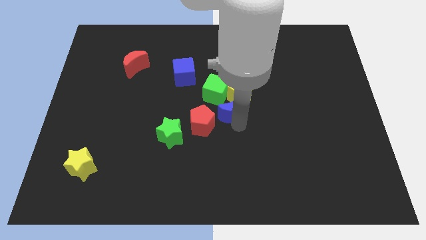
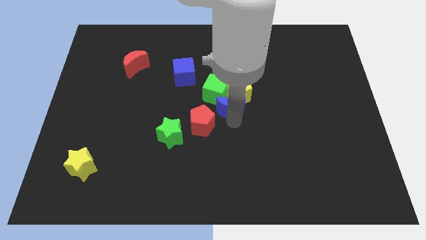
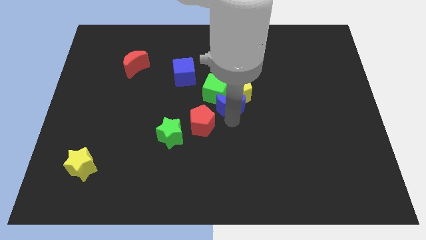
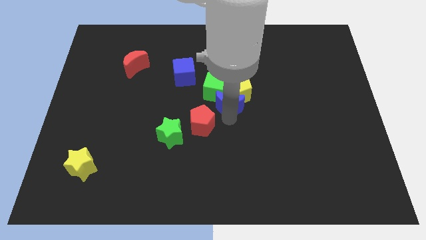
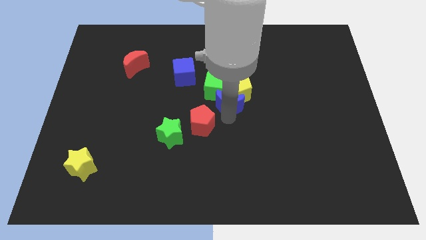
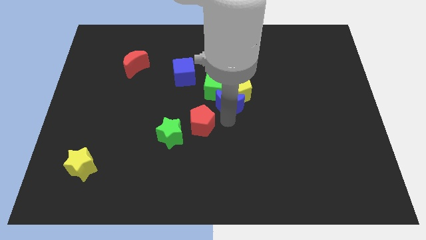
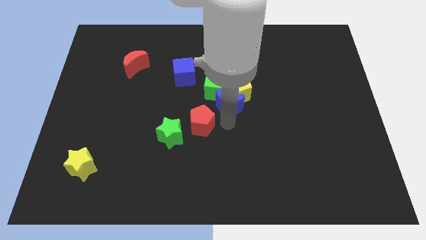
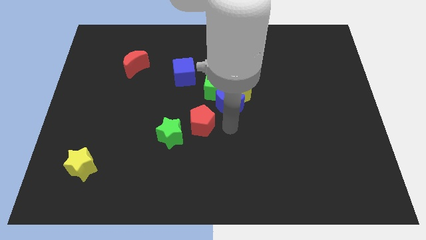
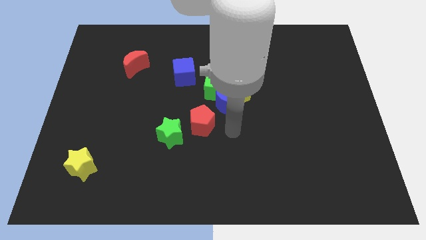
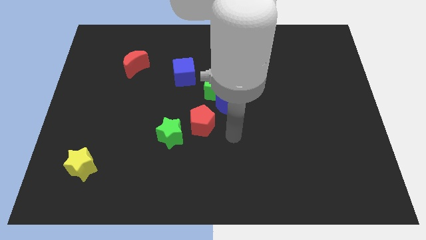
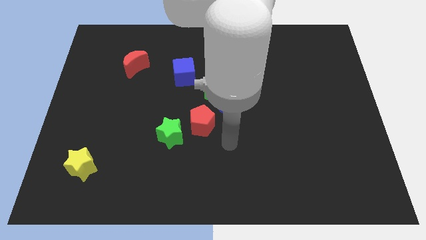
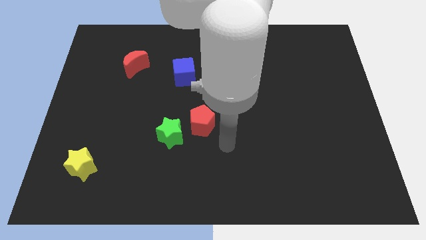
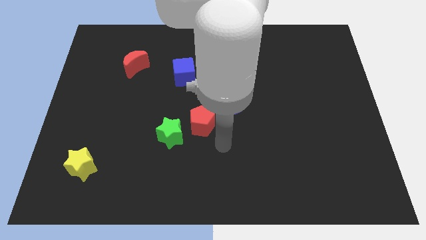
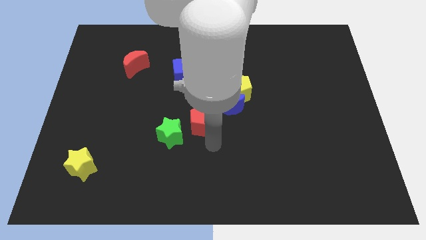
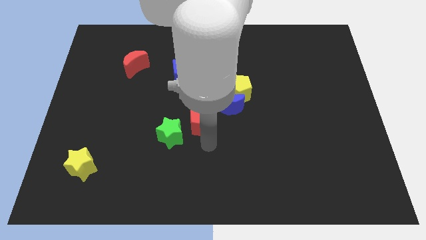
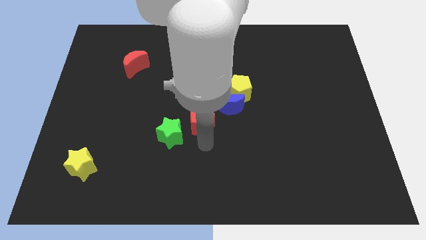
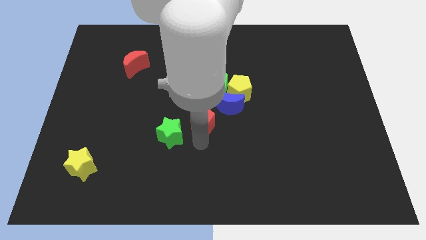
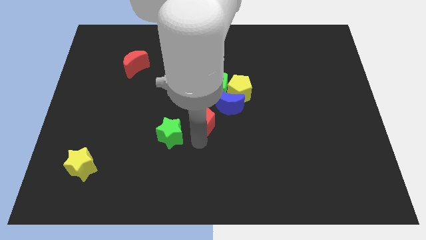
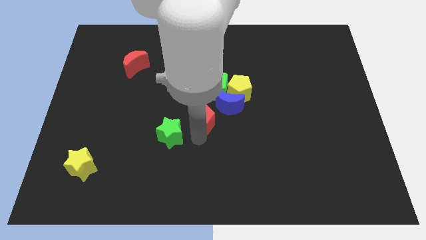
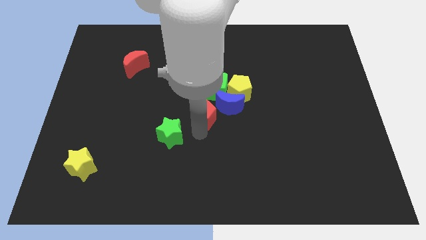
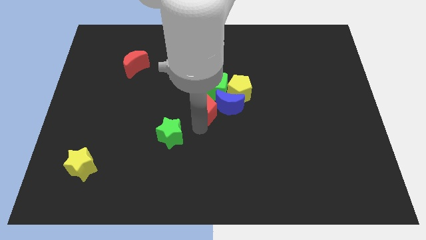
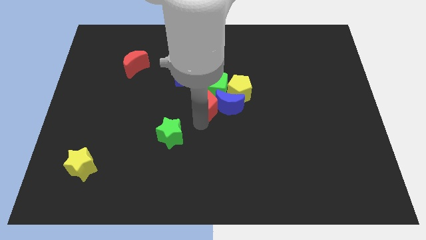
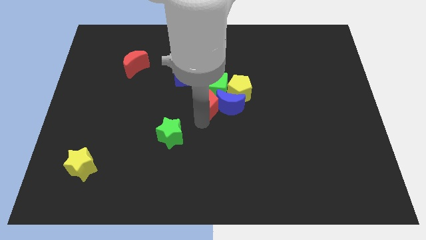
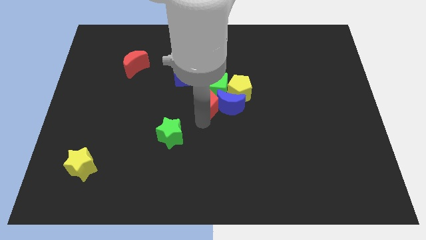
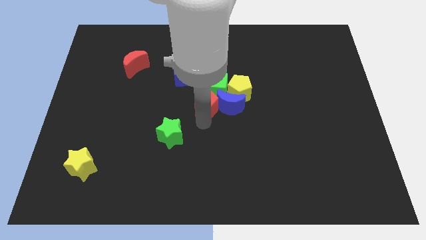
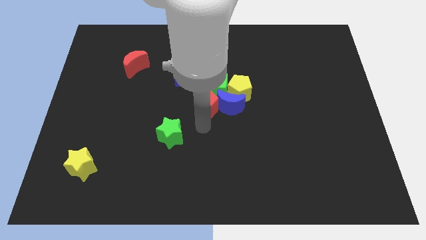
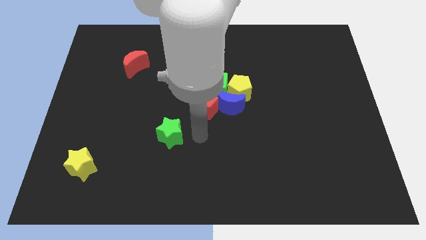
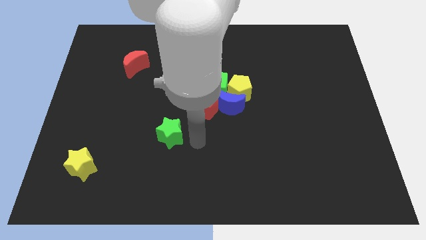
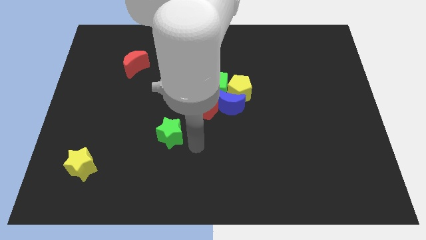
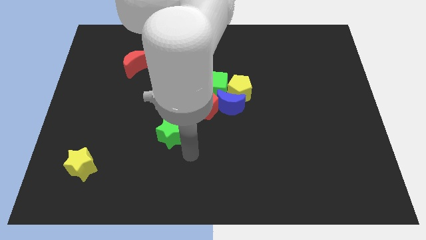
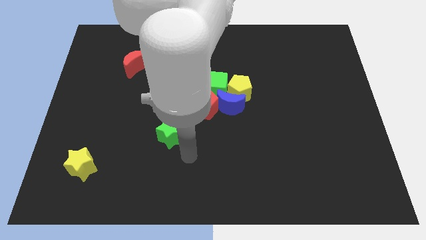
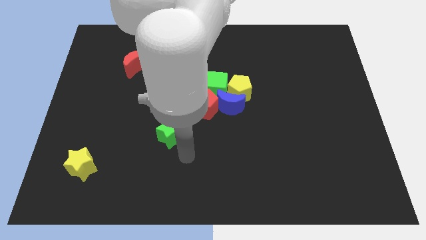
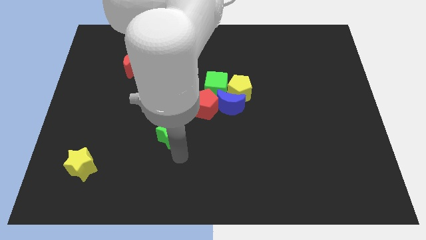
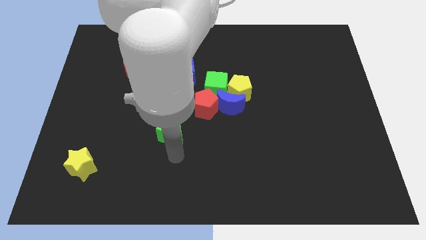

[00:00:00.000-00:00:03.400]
push blue moon and red pentagon in green cube

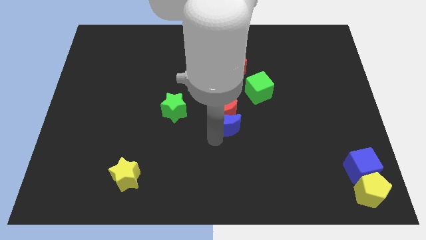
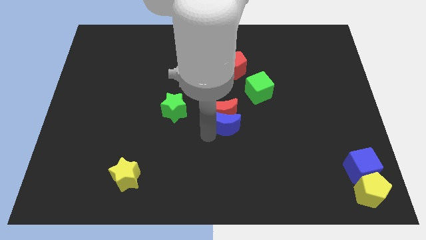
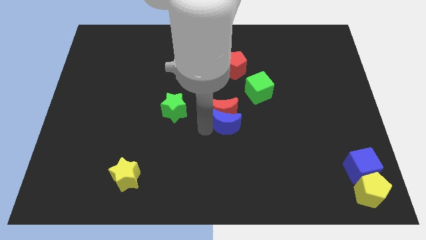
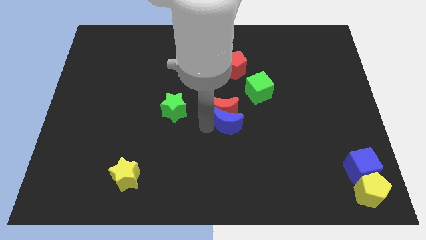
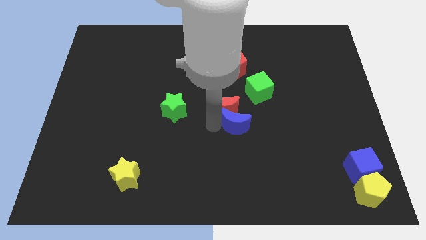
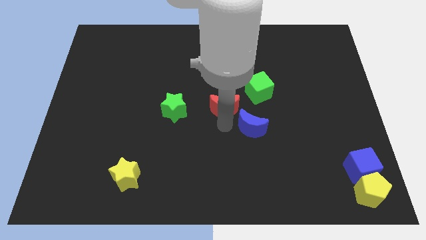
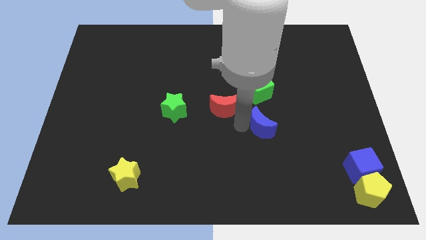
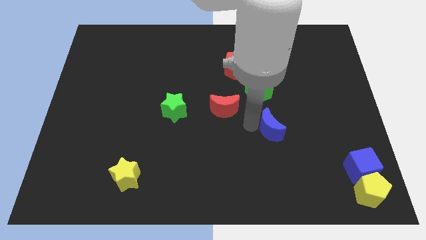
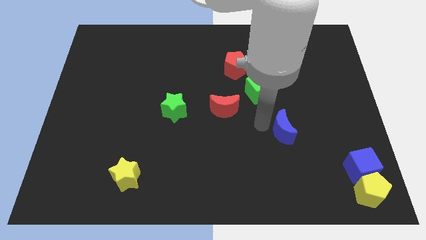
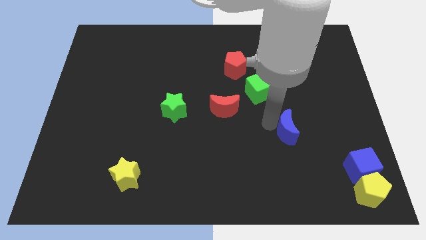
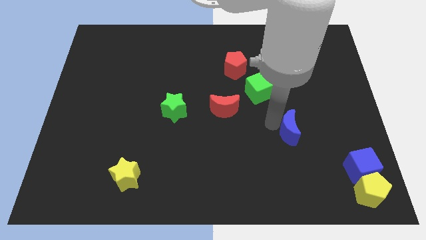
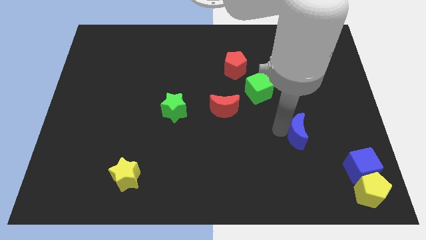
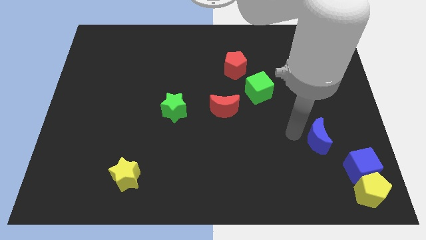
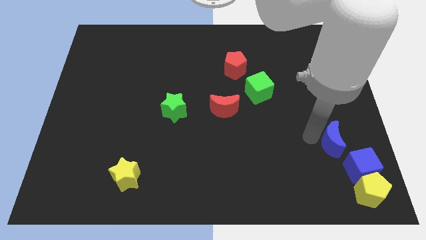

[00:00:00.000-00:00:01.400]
move the blue moon diagonally to the green cube

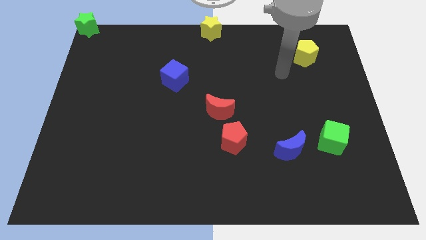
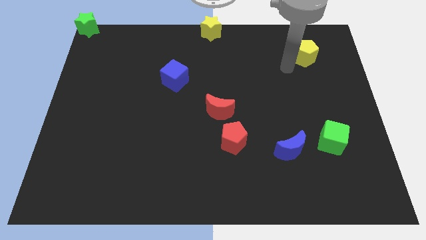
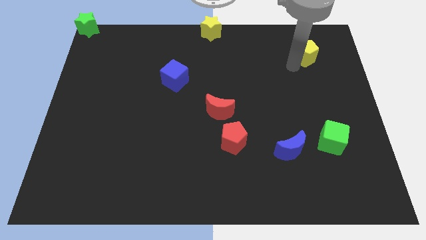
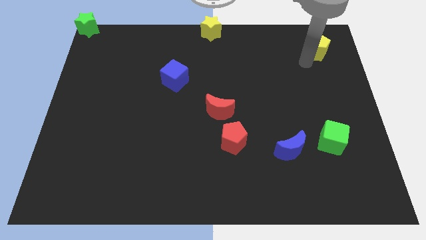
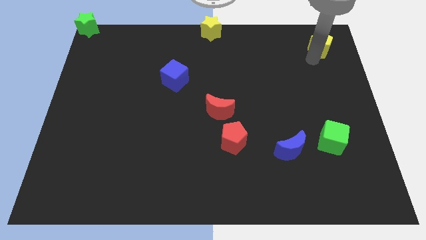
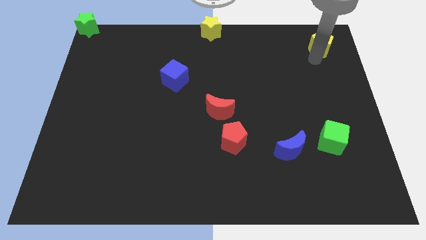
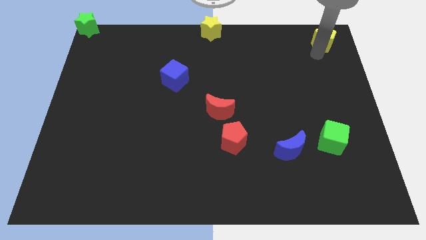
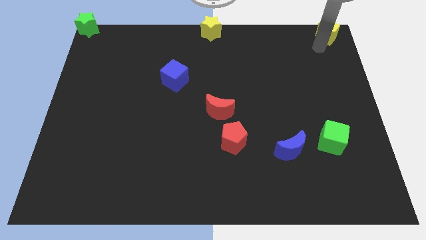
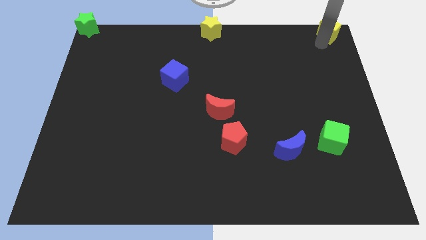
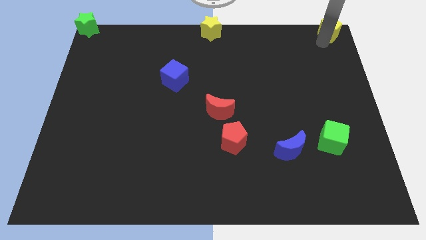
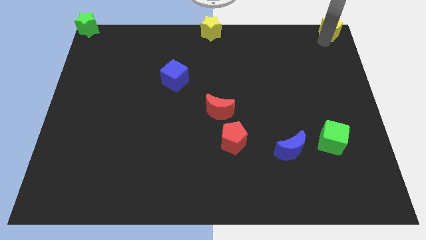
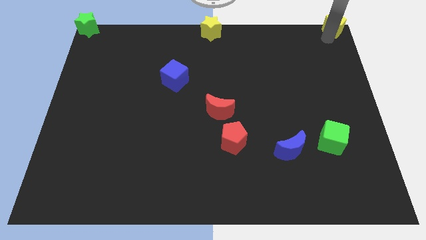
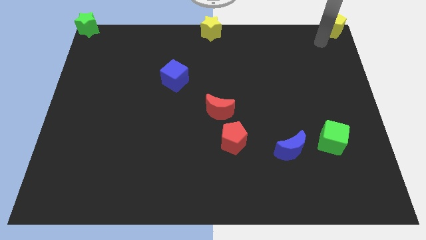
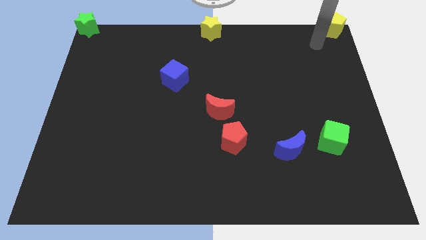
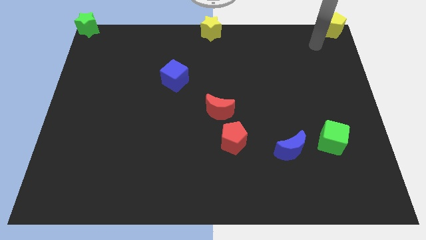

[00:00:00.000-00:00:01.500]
move the yellow pentagon to the top right

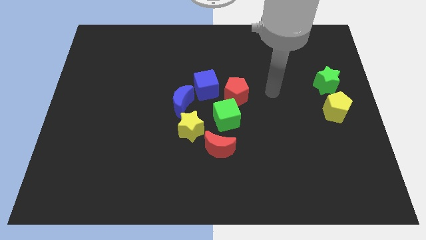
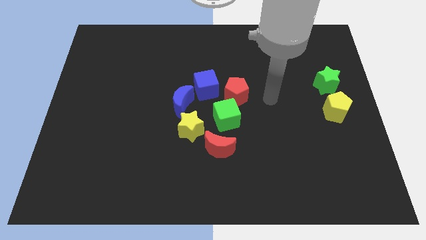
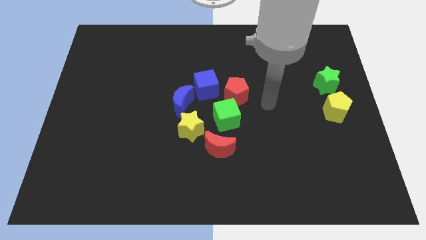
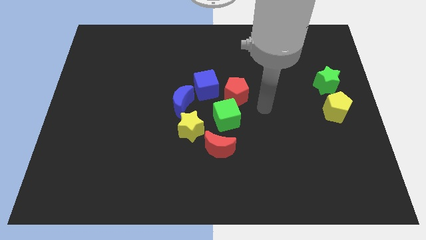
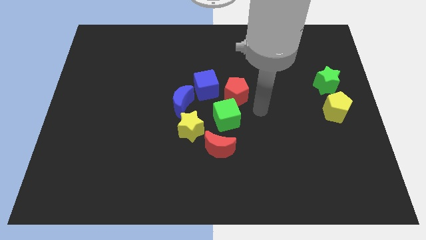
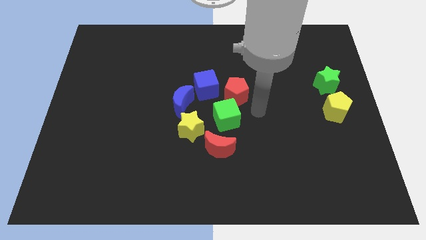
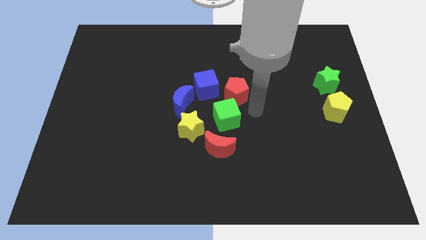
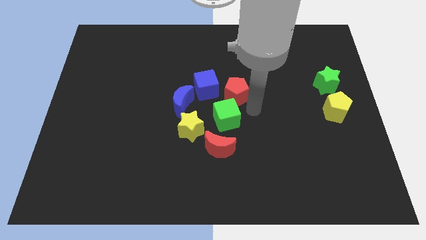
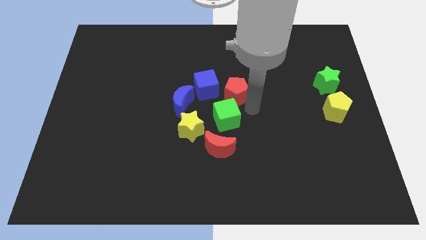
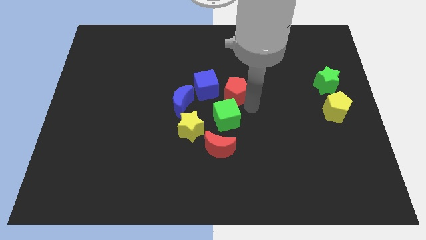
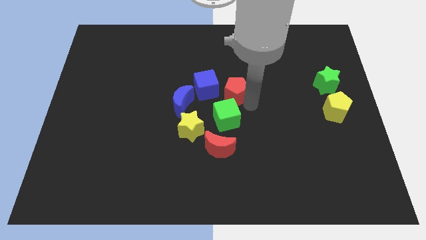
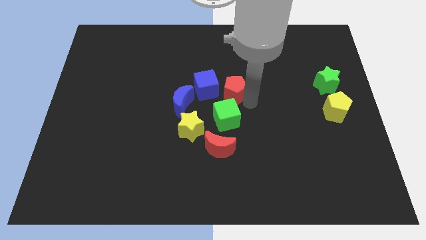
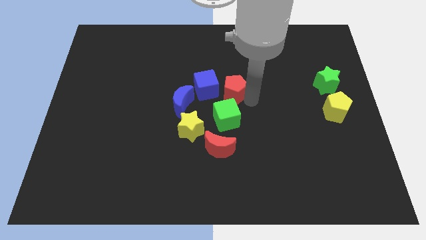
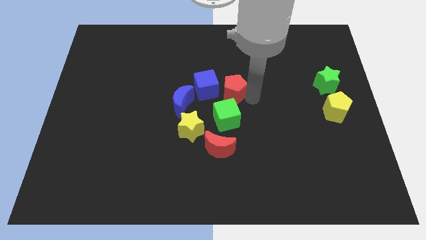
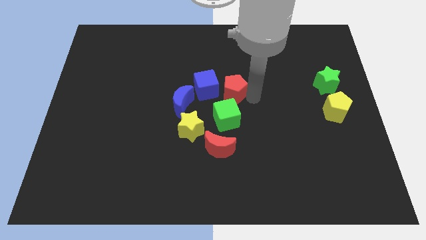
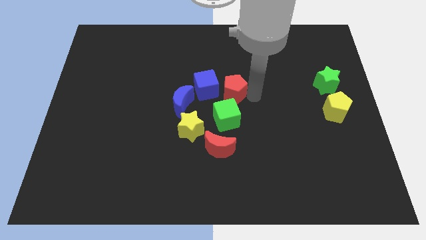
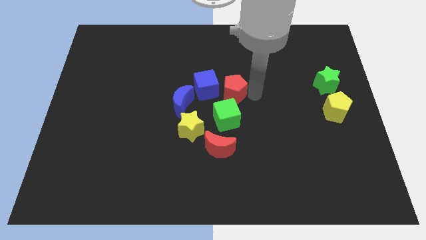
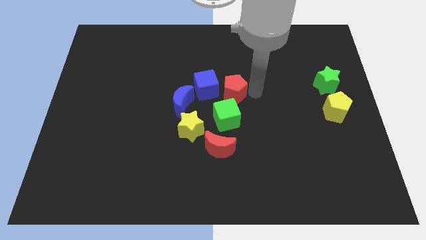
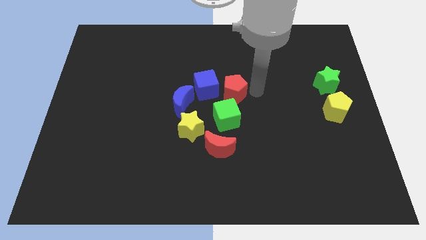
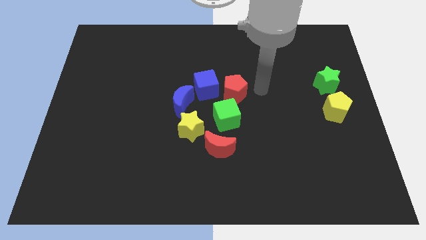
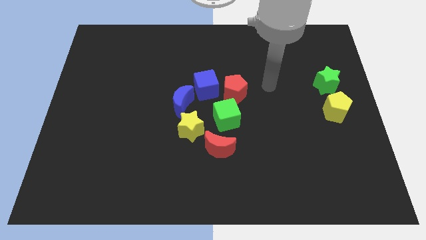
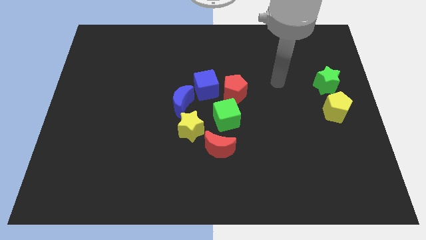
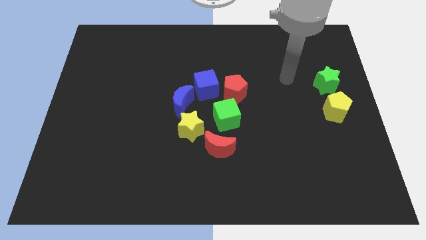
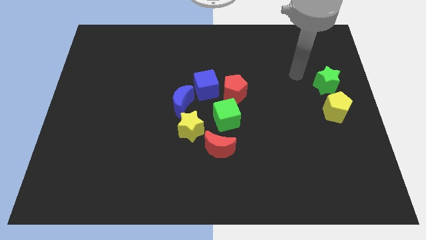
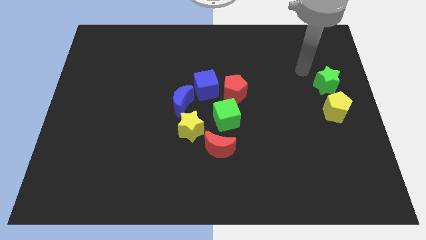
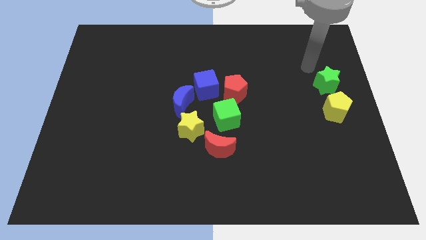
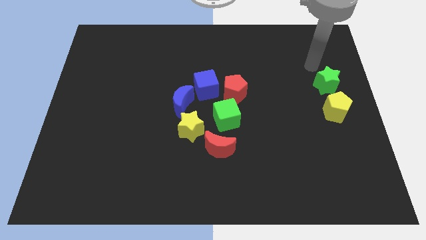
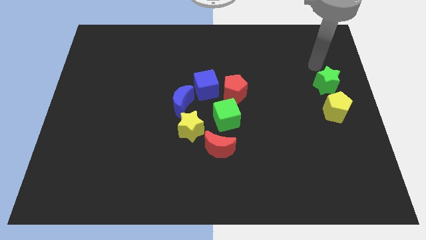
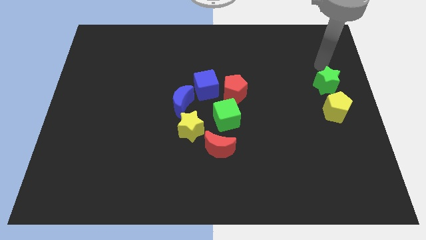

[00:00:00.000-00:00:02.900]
move the red pentagon closer to the blue cube
